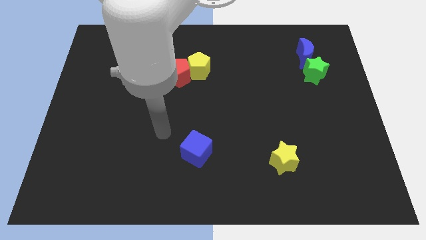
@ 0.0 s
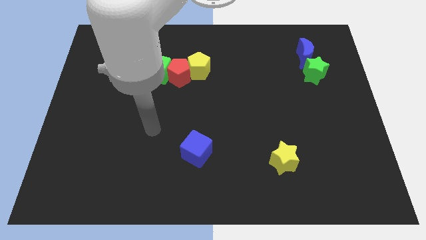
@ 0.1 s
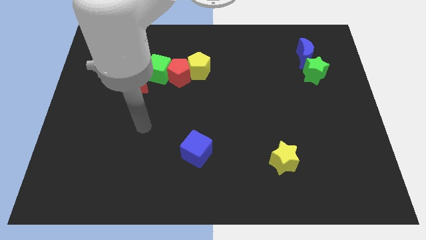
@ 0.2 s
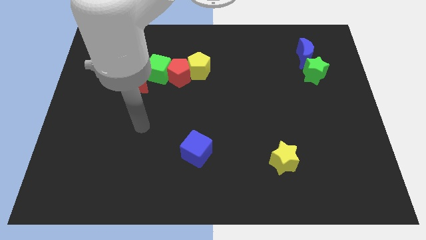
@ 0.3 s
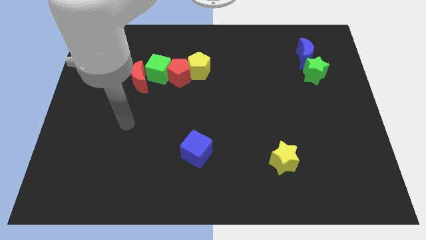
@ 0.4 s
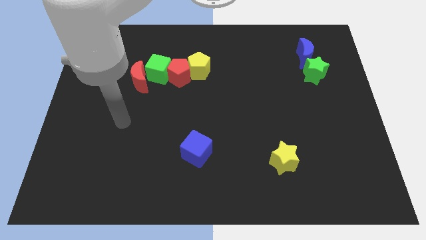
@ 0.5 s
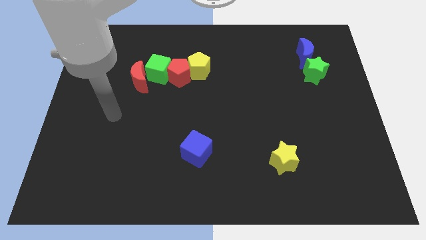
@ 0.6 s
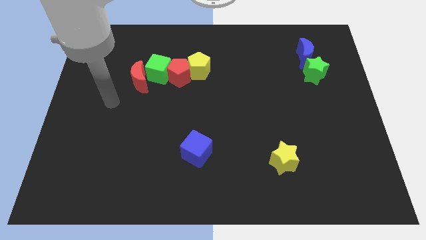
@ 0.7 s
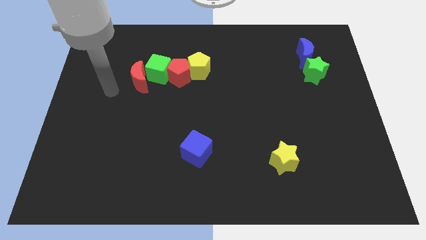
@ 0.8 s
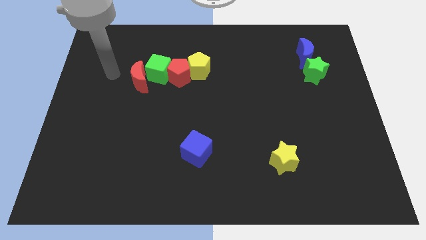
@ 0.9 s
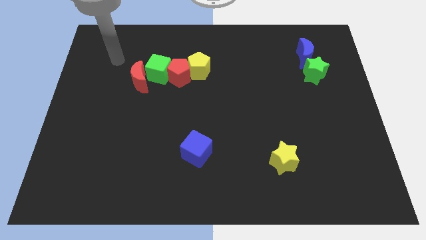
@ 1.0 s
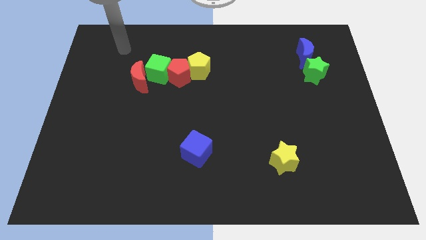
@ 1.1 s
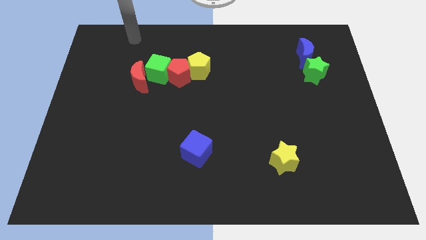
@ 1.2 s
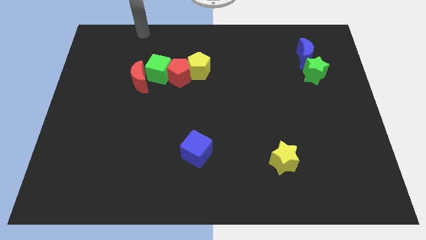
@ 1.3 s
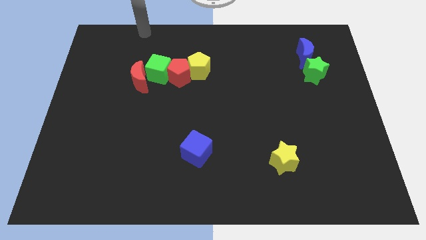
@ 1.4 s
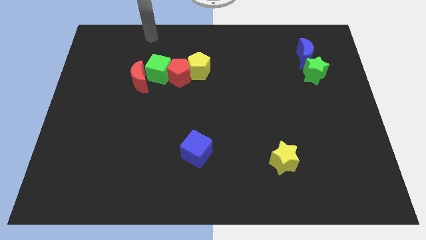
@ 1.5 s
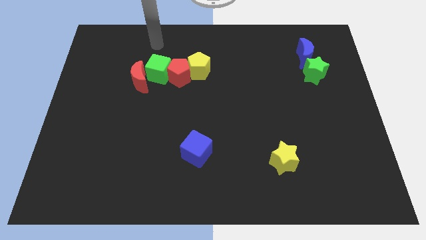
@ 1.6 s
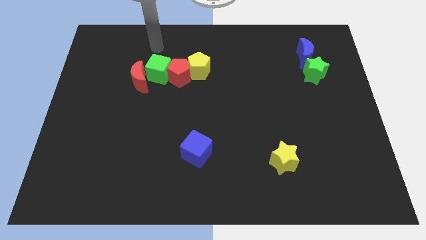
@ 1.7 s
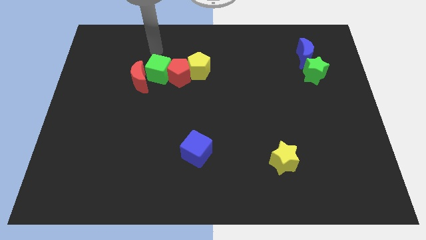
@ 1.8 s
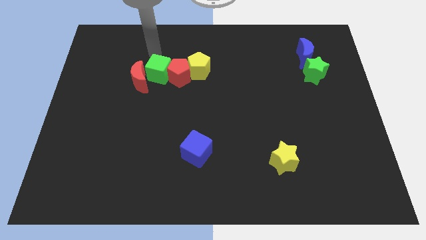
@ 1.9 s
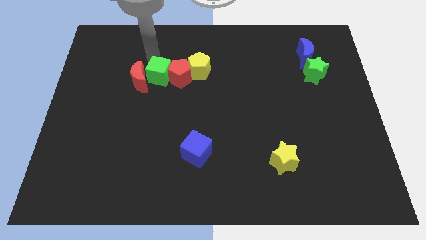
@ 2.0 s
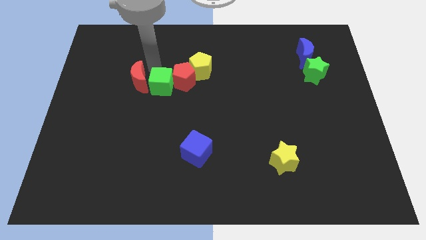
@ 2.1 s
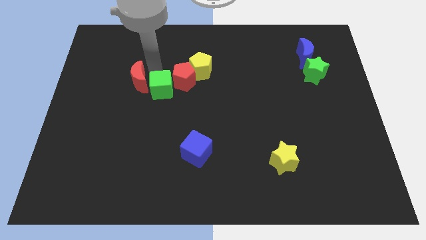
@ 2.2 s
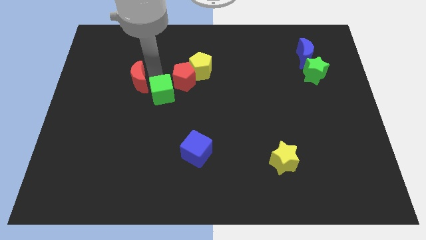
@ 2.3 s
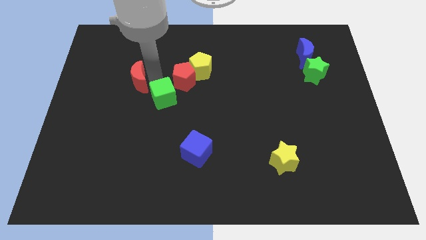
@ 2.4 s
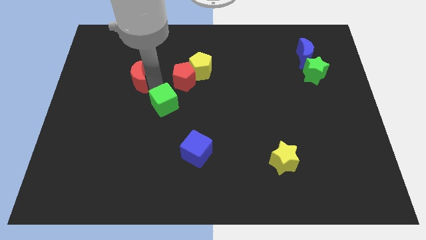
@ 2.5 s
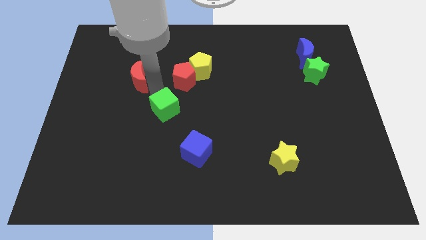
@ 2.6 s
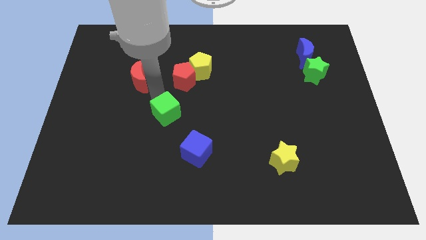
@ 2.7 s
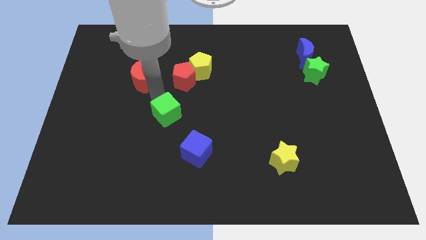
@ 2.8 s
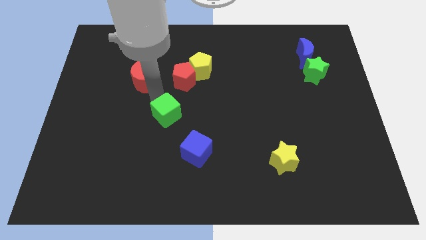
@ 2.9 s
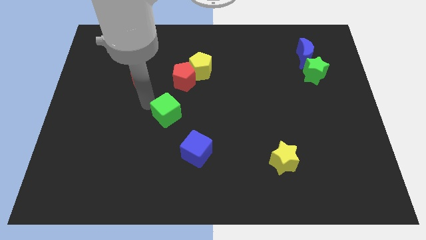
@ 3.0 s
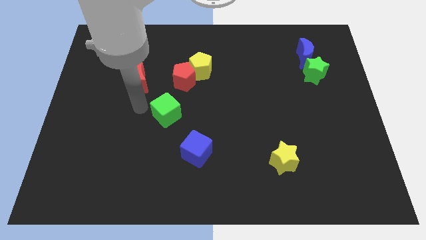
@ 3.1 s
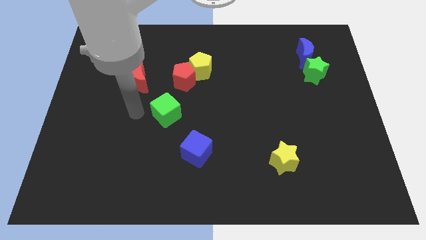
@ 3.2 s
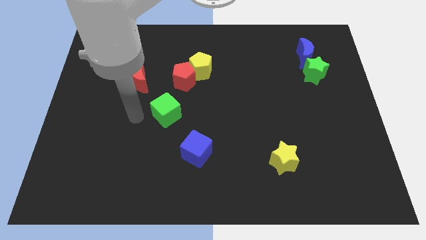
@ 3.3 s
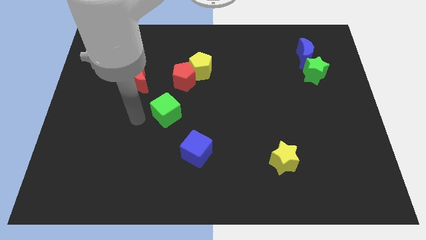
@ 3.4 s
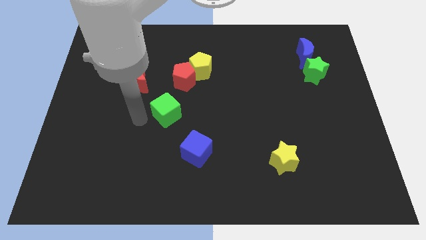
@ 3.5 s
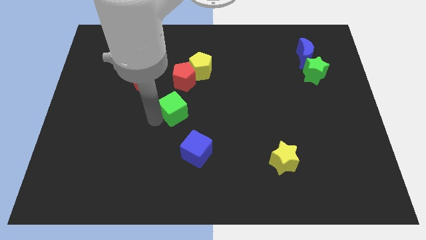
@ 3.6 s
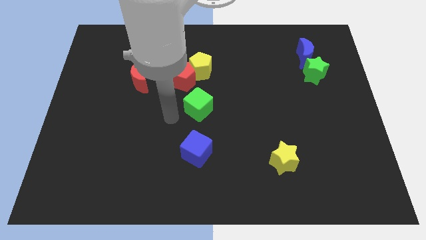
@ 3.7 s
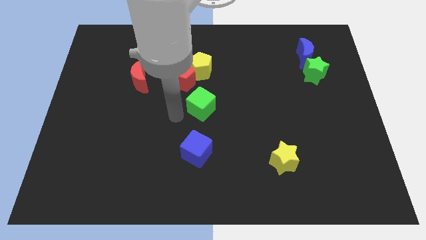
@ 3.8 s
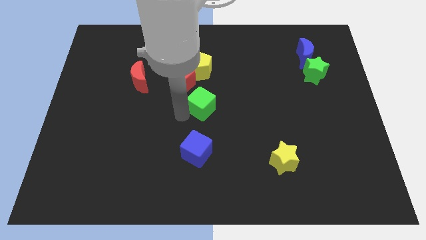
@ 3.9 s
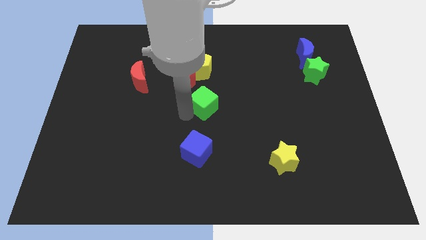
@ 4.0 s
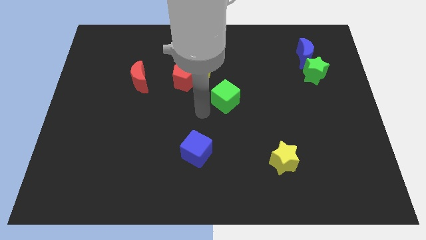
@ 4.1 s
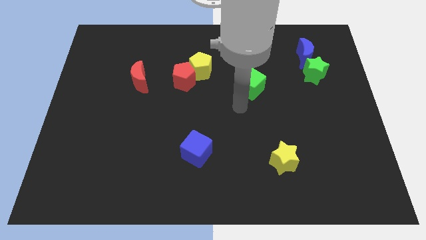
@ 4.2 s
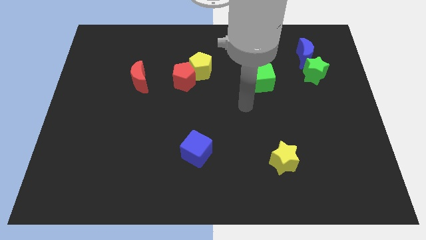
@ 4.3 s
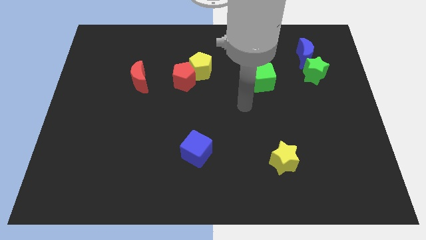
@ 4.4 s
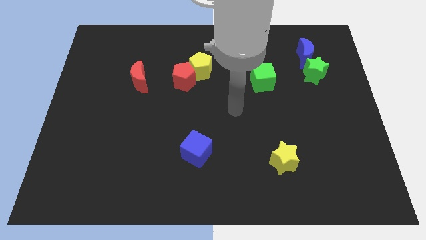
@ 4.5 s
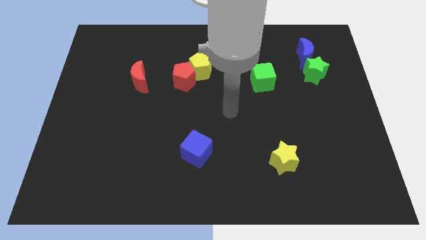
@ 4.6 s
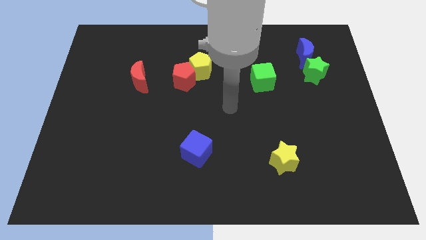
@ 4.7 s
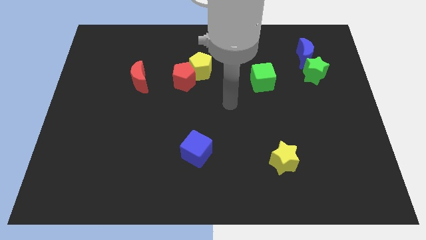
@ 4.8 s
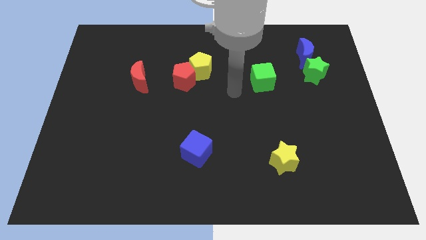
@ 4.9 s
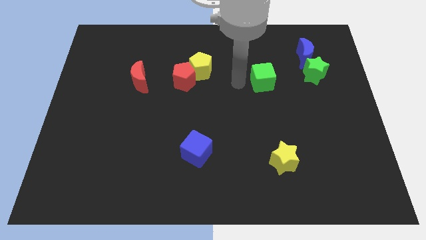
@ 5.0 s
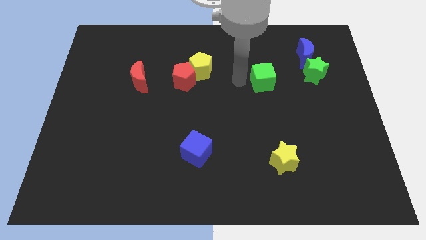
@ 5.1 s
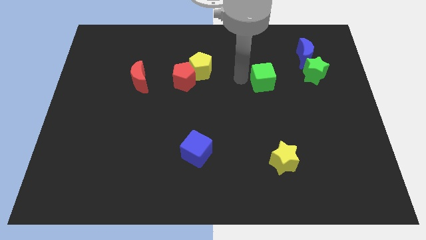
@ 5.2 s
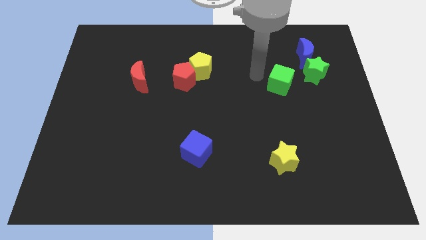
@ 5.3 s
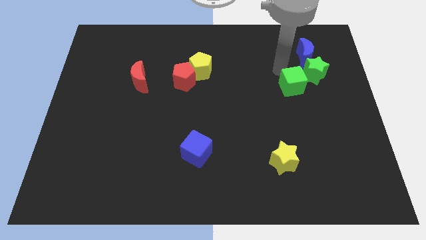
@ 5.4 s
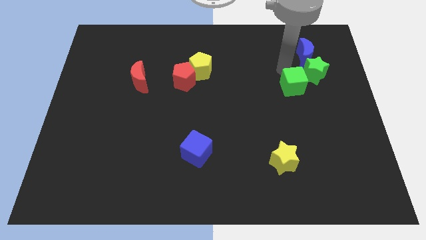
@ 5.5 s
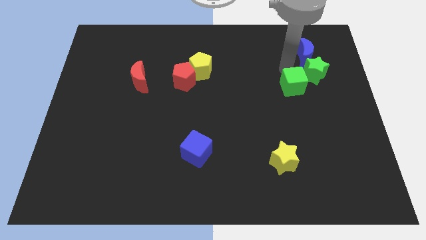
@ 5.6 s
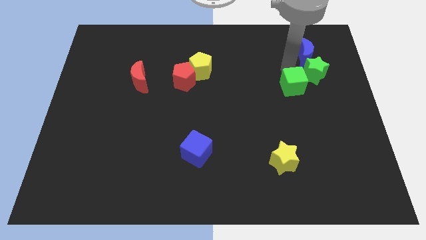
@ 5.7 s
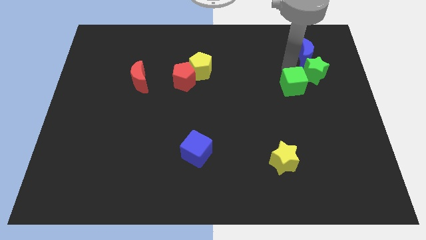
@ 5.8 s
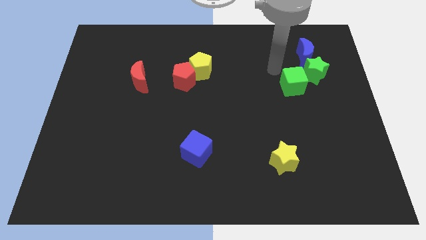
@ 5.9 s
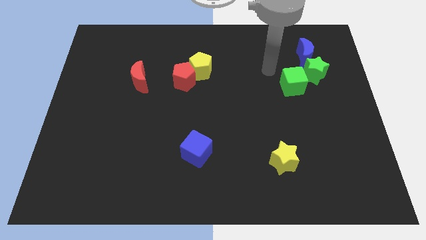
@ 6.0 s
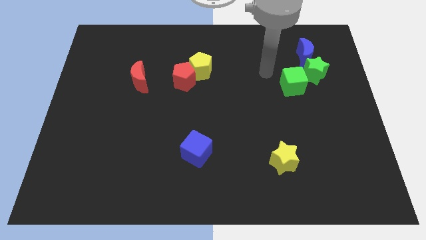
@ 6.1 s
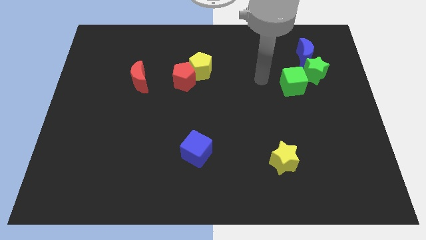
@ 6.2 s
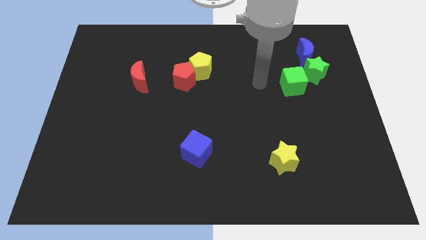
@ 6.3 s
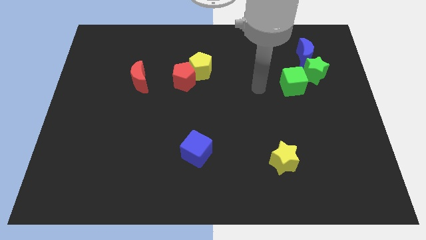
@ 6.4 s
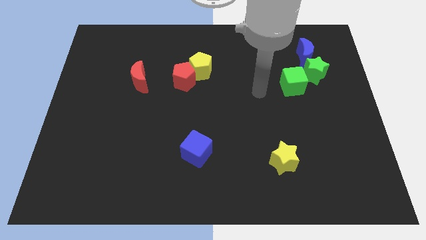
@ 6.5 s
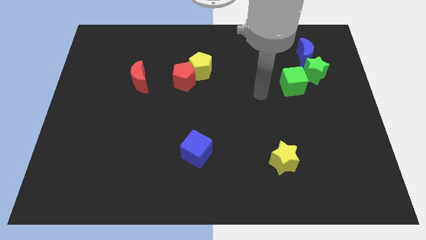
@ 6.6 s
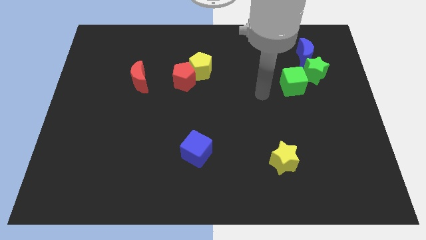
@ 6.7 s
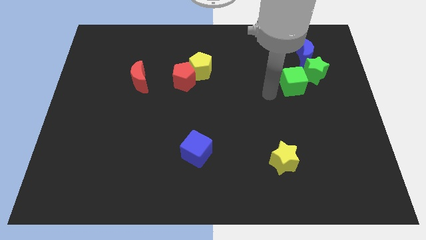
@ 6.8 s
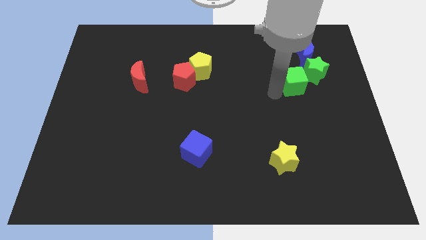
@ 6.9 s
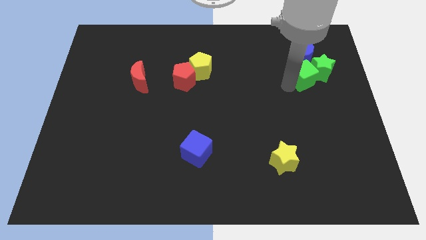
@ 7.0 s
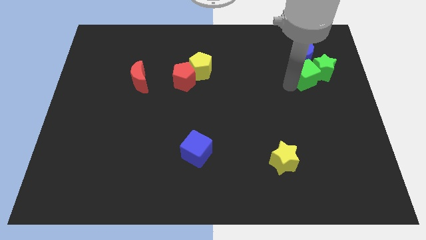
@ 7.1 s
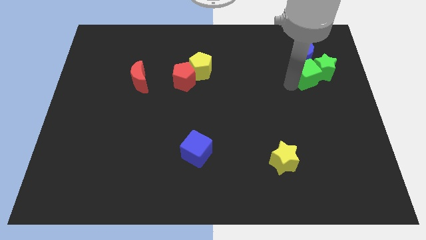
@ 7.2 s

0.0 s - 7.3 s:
put the green cube to the green star

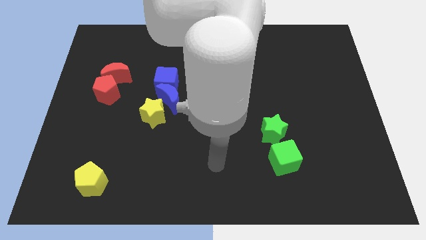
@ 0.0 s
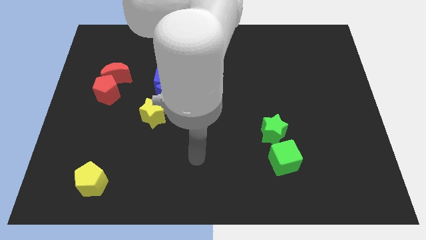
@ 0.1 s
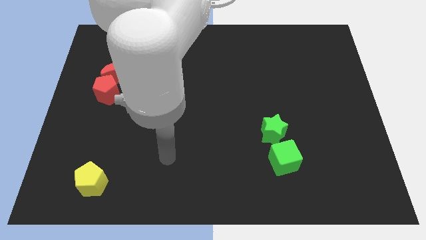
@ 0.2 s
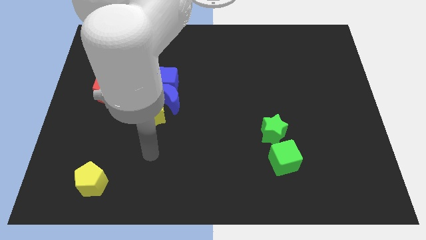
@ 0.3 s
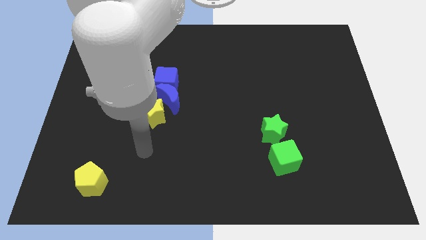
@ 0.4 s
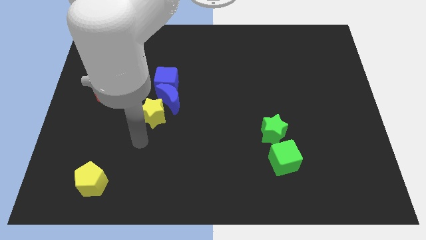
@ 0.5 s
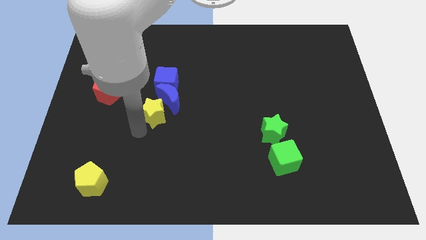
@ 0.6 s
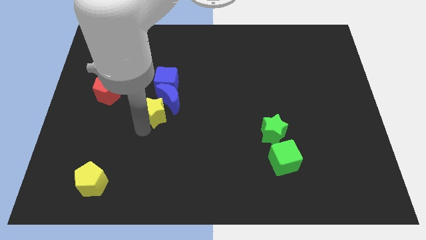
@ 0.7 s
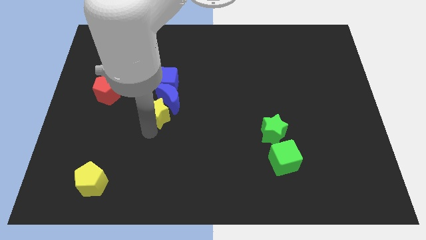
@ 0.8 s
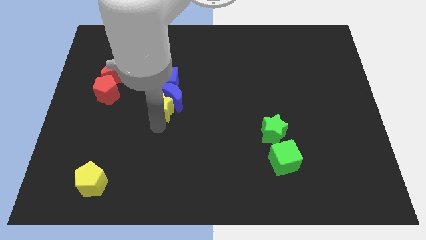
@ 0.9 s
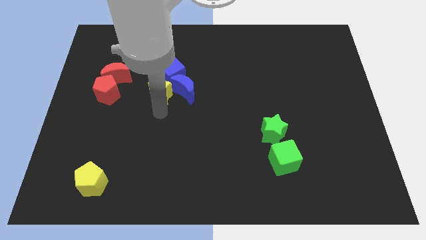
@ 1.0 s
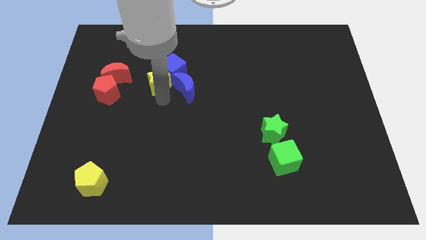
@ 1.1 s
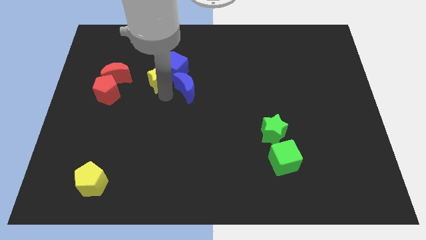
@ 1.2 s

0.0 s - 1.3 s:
put the yellow star next to the blue cube
